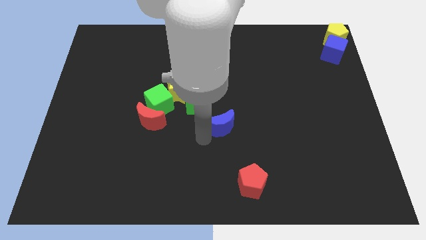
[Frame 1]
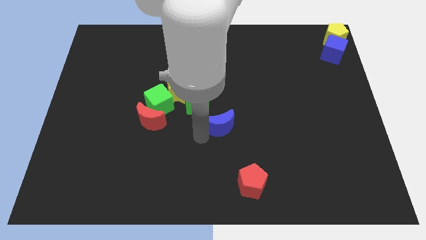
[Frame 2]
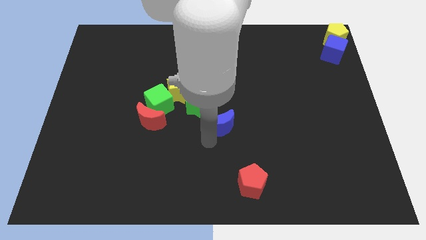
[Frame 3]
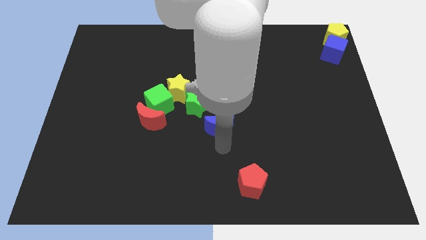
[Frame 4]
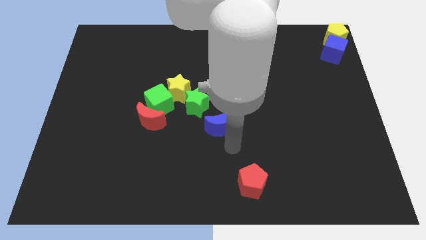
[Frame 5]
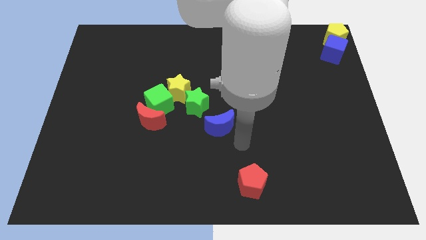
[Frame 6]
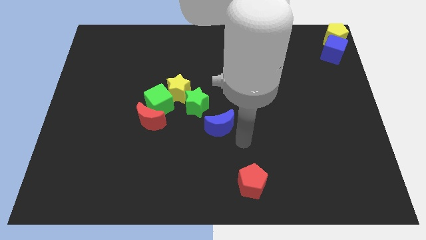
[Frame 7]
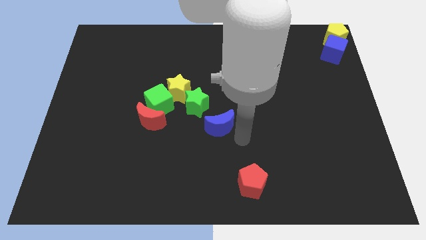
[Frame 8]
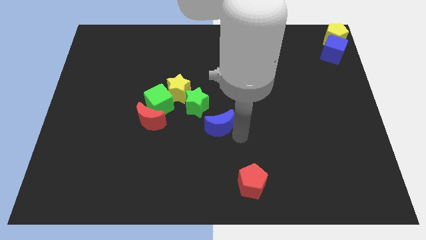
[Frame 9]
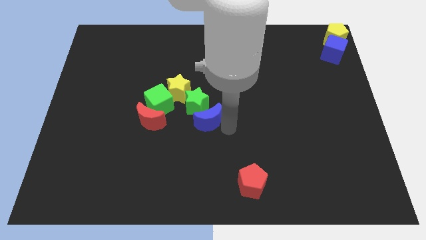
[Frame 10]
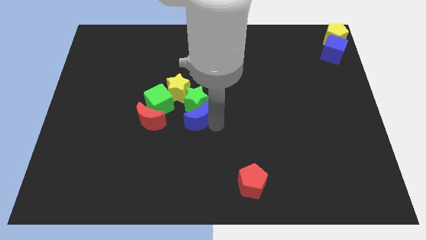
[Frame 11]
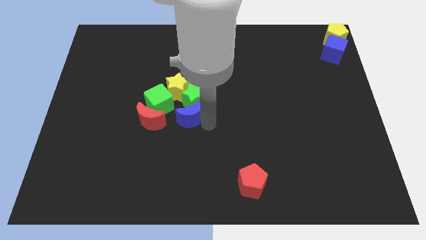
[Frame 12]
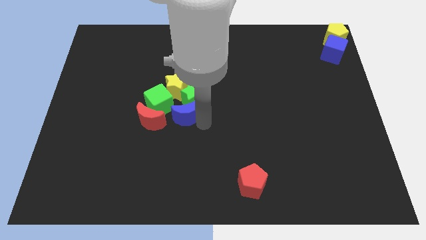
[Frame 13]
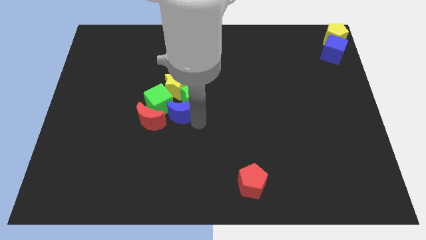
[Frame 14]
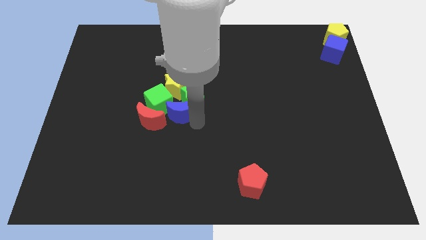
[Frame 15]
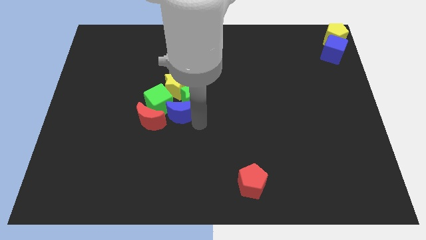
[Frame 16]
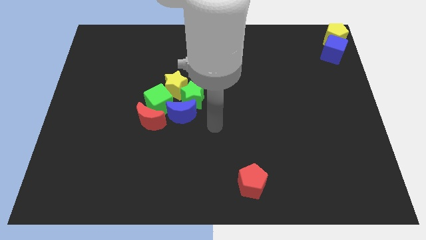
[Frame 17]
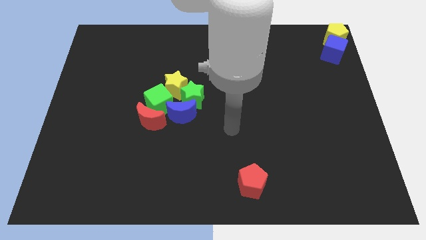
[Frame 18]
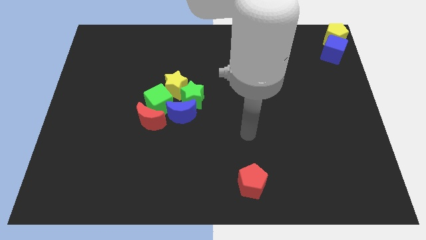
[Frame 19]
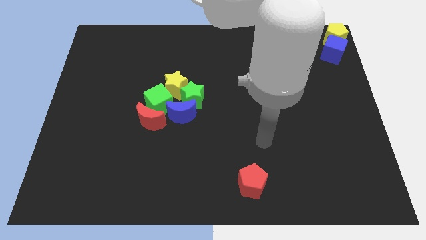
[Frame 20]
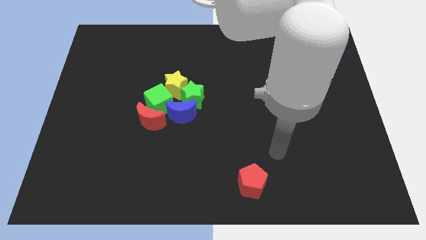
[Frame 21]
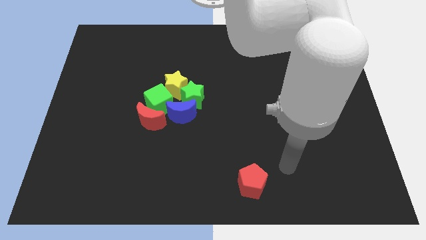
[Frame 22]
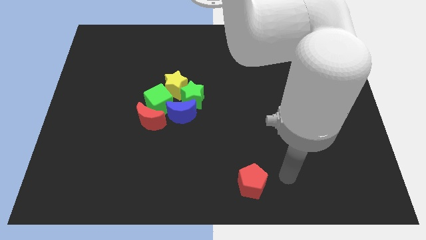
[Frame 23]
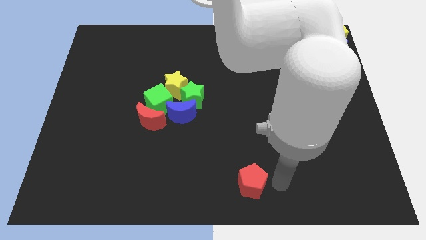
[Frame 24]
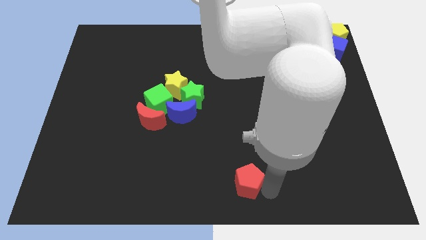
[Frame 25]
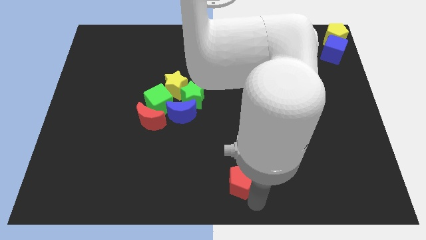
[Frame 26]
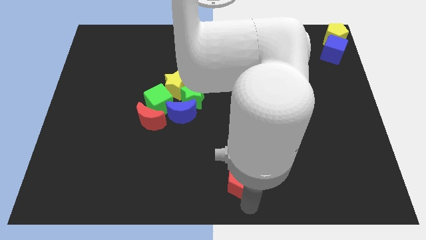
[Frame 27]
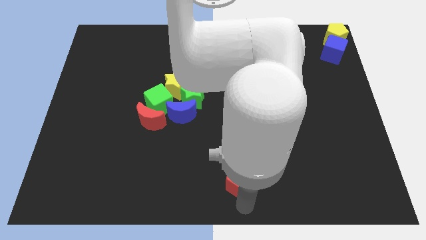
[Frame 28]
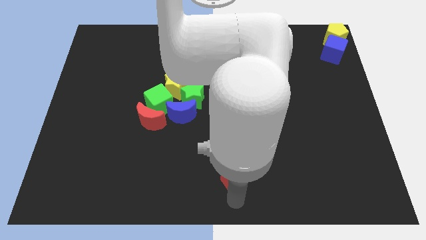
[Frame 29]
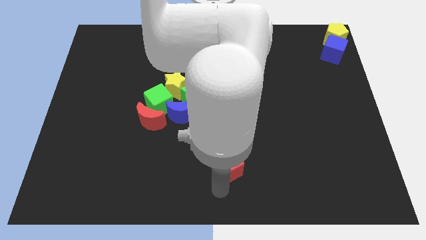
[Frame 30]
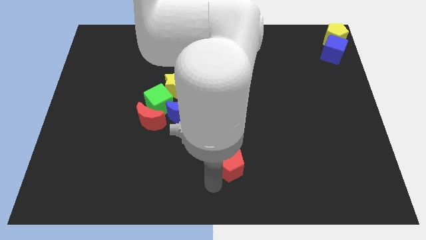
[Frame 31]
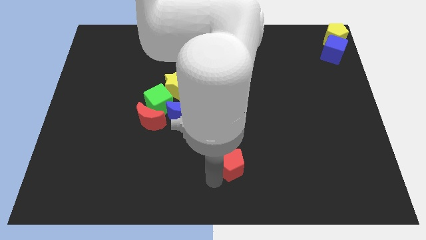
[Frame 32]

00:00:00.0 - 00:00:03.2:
move the red pentagon towards the top center

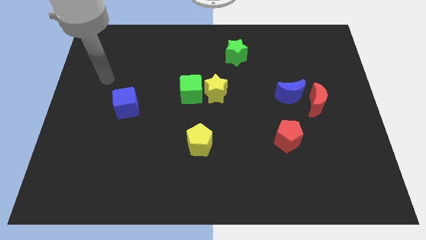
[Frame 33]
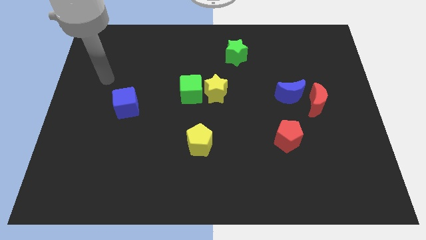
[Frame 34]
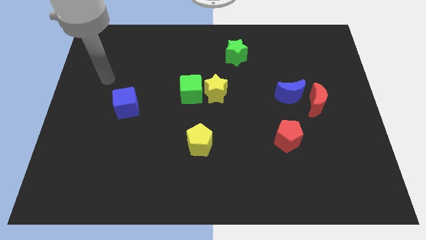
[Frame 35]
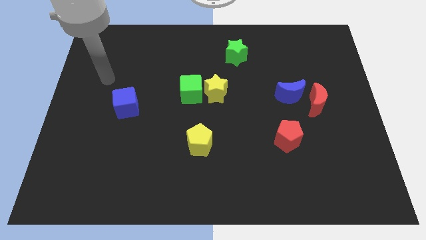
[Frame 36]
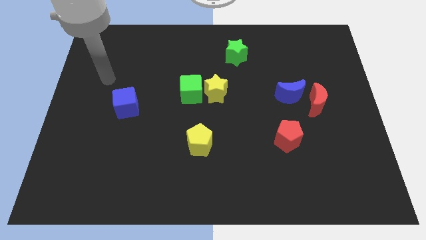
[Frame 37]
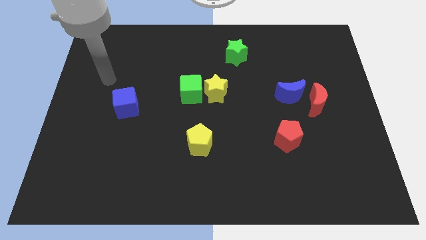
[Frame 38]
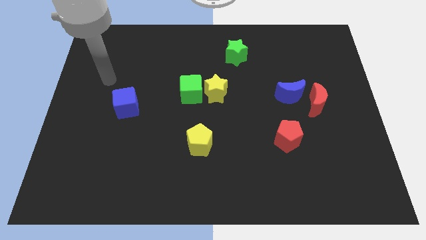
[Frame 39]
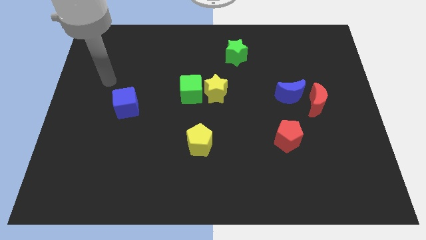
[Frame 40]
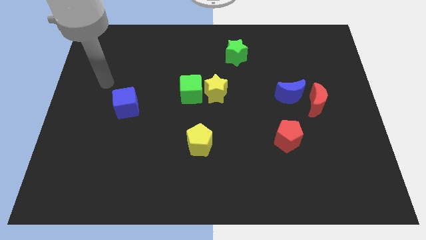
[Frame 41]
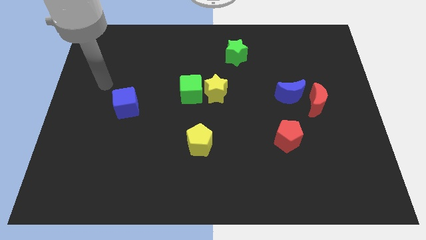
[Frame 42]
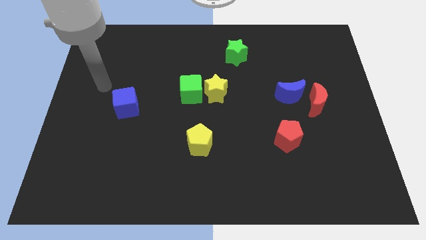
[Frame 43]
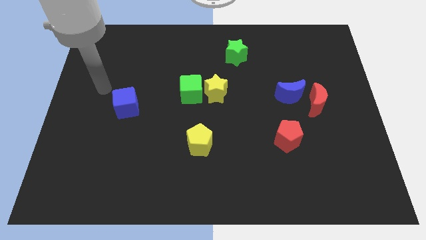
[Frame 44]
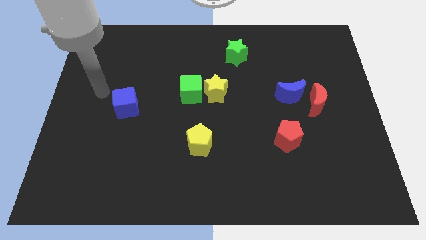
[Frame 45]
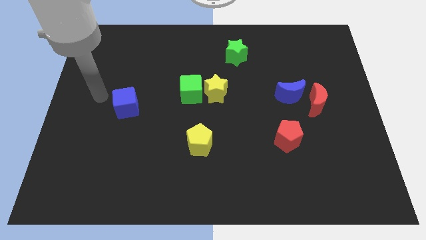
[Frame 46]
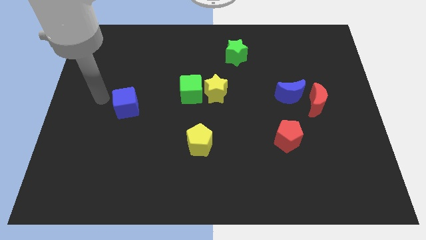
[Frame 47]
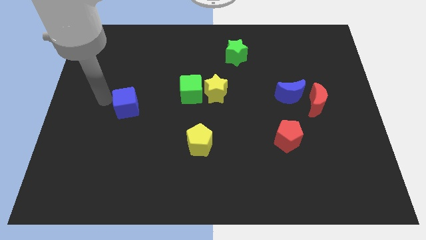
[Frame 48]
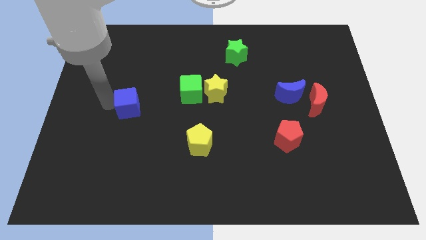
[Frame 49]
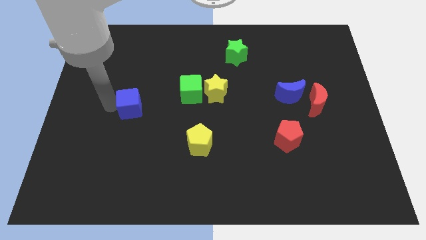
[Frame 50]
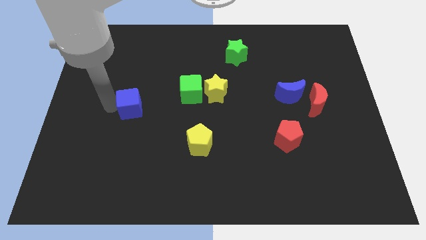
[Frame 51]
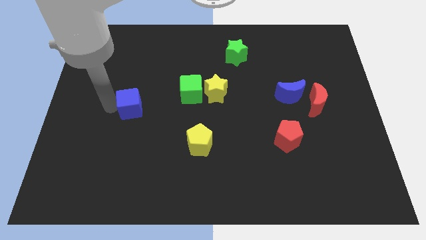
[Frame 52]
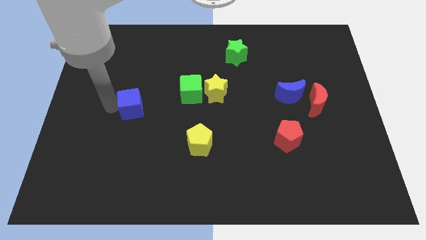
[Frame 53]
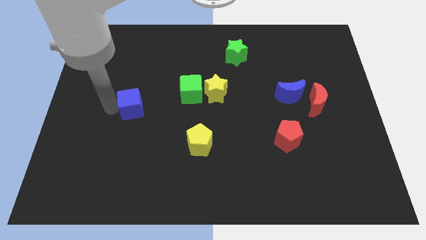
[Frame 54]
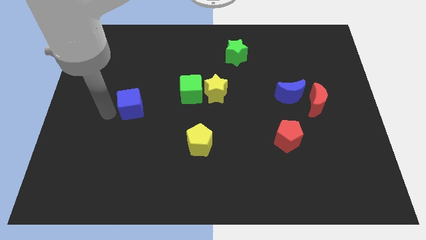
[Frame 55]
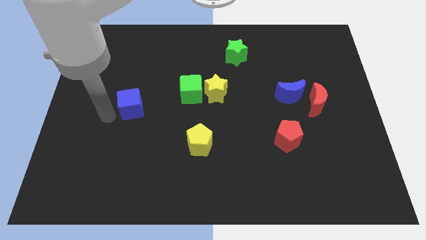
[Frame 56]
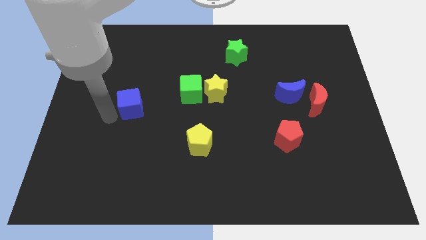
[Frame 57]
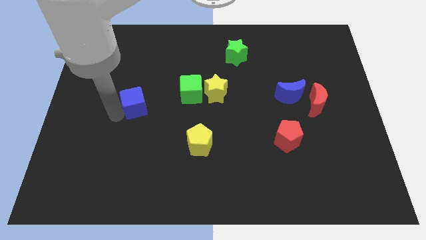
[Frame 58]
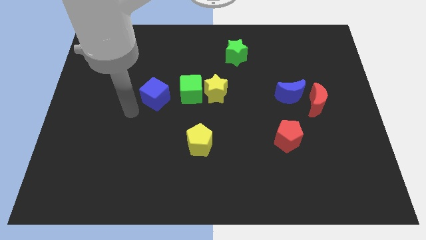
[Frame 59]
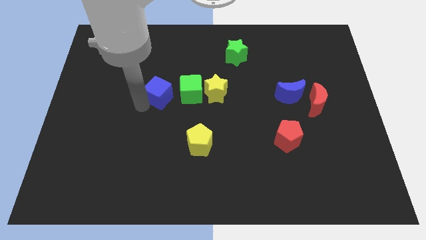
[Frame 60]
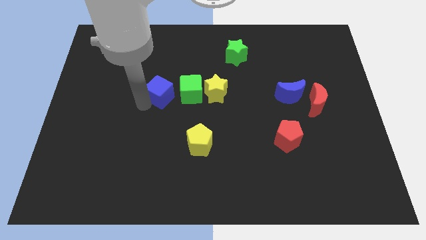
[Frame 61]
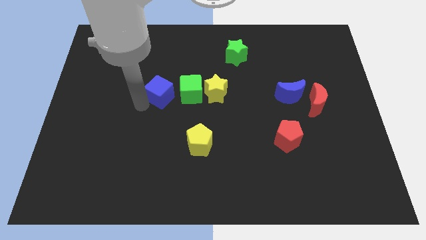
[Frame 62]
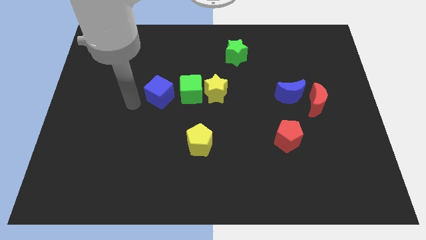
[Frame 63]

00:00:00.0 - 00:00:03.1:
place the blue cube at the left side of the green cube

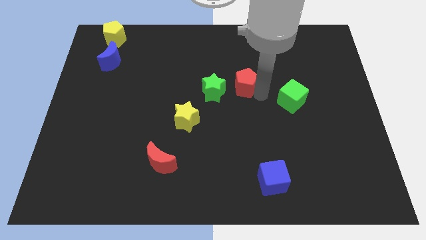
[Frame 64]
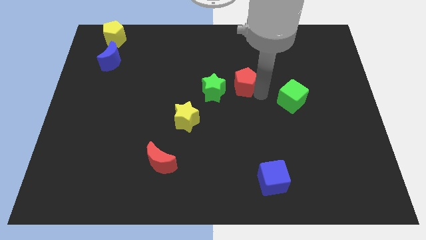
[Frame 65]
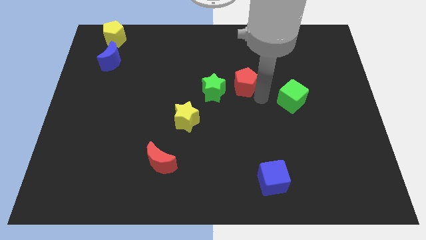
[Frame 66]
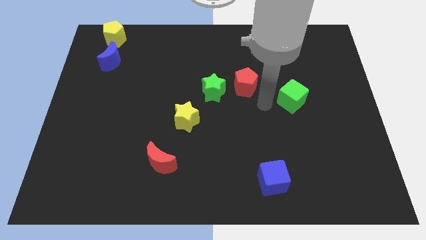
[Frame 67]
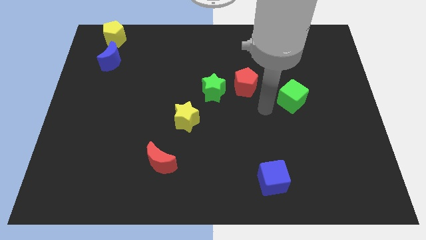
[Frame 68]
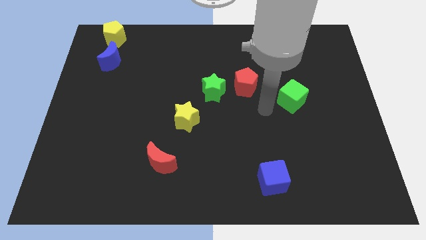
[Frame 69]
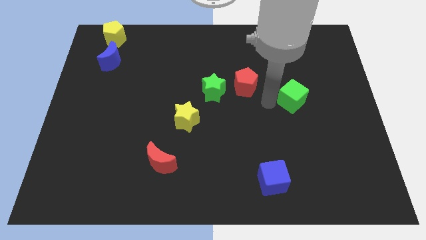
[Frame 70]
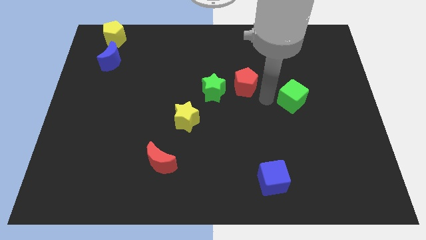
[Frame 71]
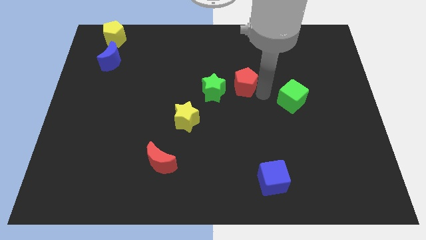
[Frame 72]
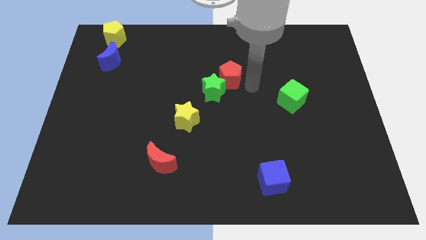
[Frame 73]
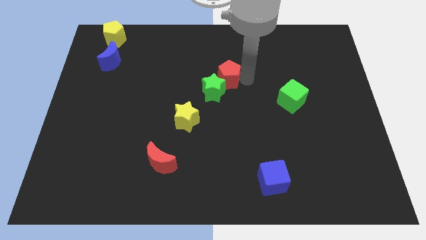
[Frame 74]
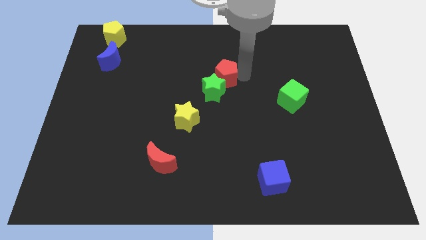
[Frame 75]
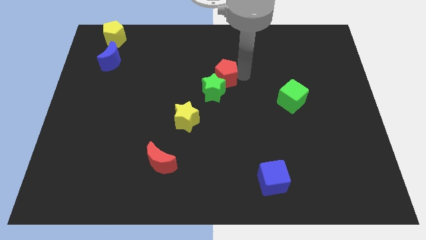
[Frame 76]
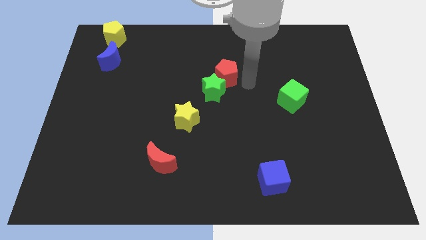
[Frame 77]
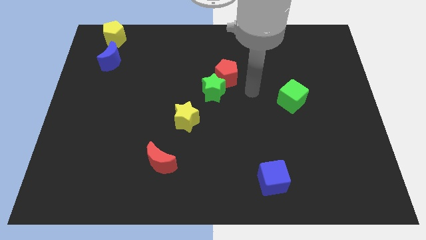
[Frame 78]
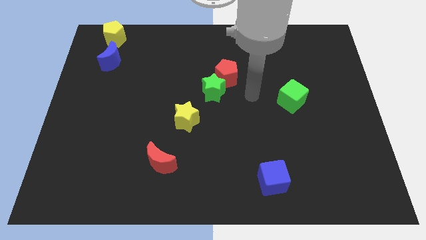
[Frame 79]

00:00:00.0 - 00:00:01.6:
place the red pentagon towards the top right to the green star

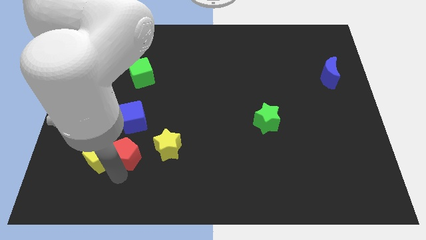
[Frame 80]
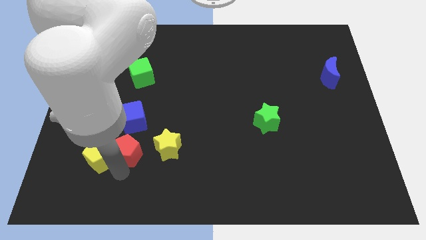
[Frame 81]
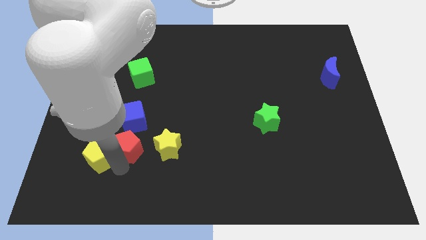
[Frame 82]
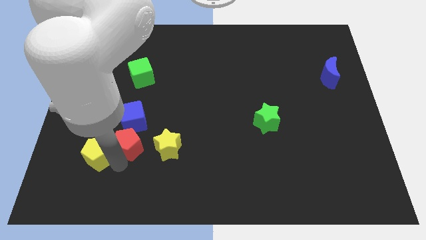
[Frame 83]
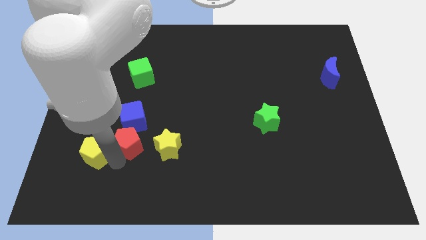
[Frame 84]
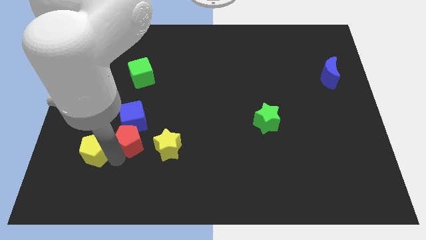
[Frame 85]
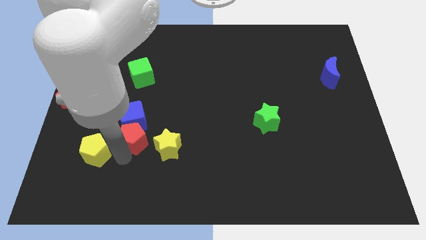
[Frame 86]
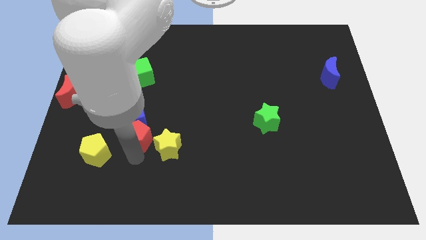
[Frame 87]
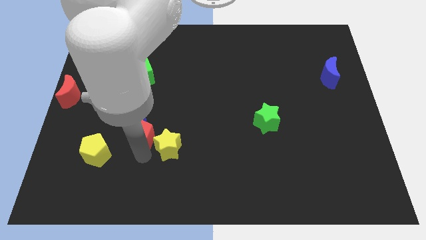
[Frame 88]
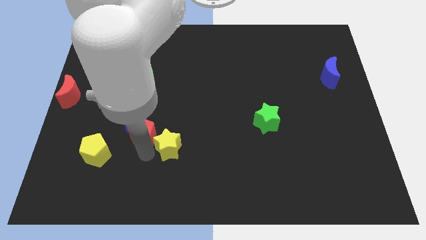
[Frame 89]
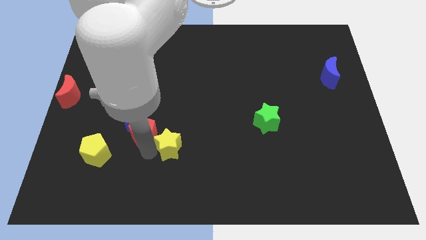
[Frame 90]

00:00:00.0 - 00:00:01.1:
separate yellow pentagon and red pentagon
